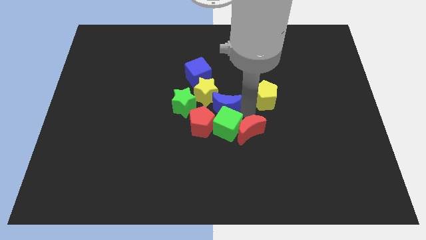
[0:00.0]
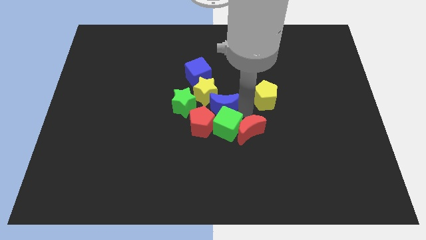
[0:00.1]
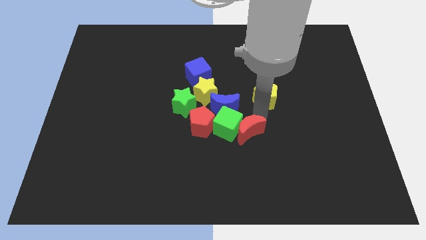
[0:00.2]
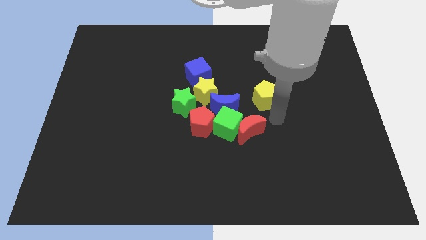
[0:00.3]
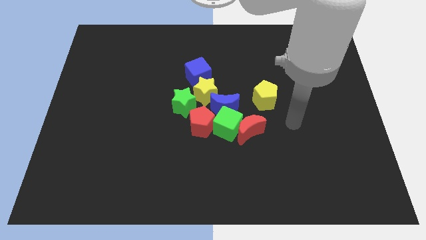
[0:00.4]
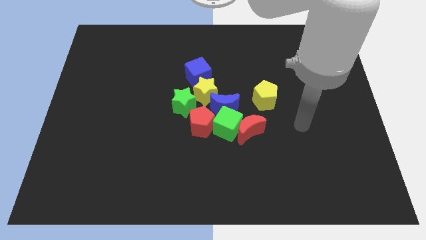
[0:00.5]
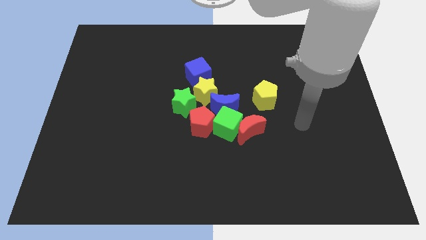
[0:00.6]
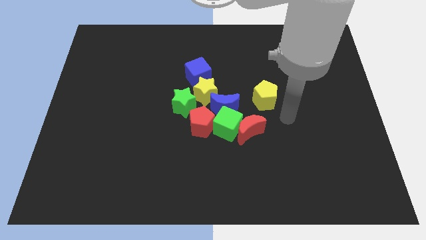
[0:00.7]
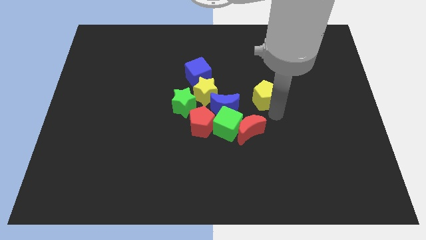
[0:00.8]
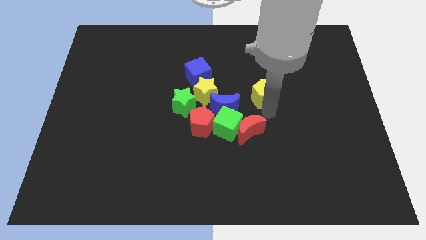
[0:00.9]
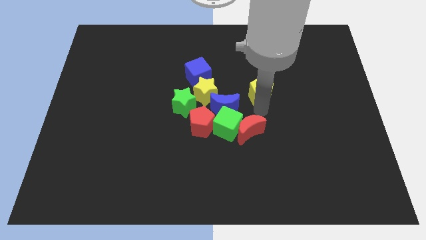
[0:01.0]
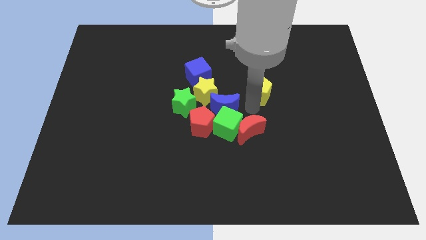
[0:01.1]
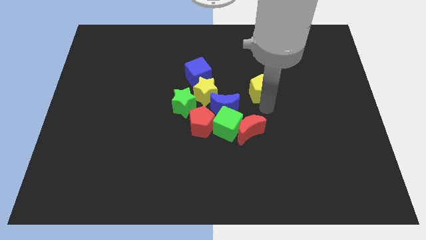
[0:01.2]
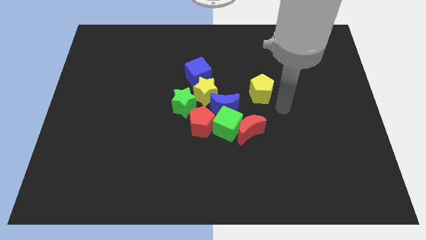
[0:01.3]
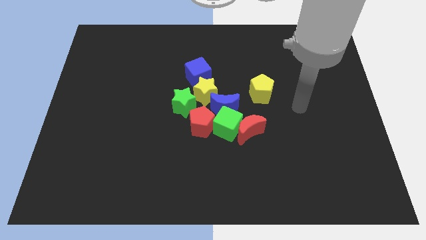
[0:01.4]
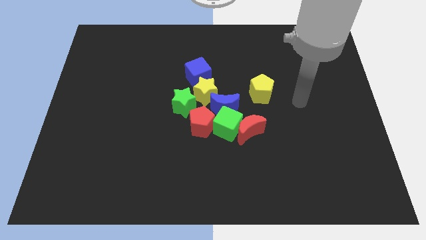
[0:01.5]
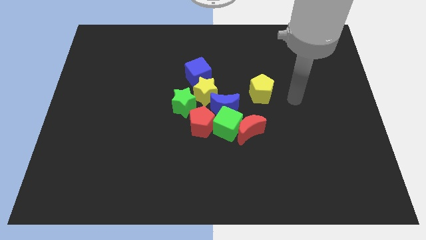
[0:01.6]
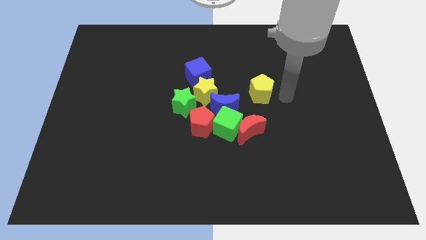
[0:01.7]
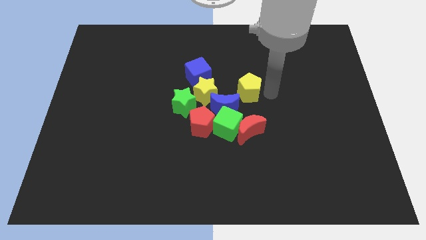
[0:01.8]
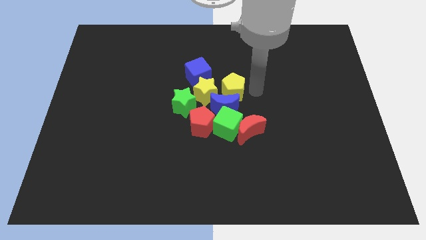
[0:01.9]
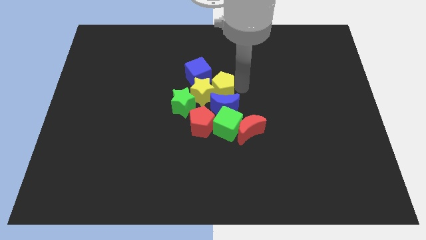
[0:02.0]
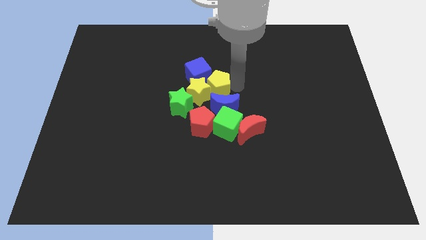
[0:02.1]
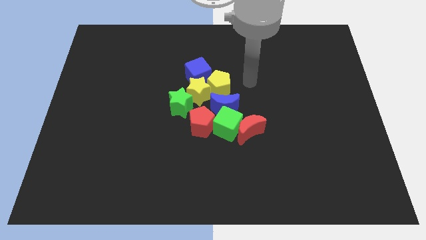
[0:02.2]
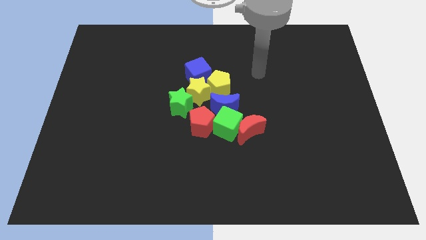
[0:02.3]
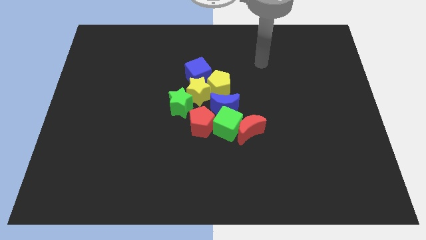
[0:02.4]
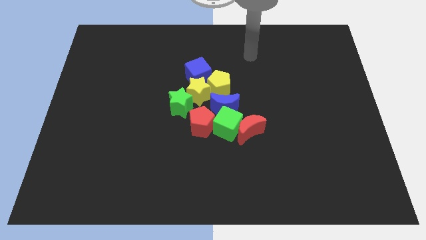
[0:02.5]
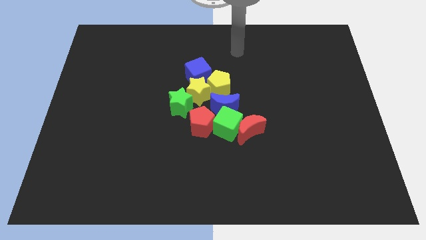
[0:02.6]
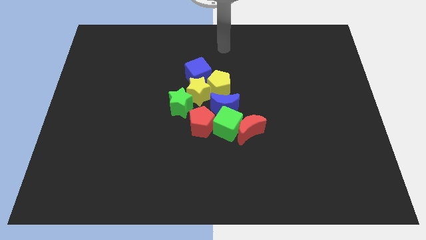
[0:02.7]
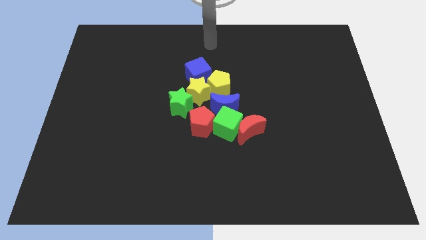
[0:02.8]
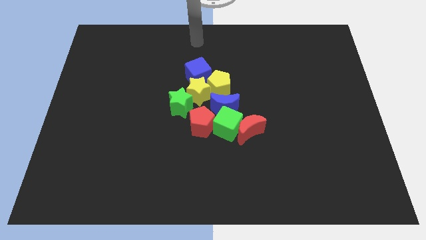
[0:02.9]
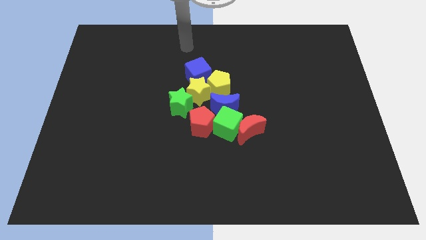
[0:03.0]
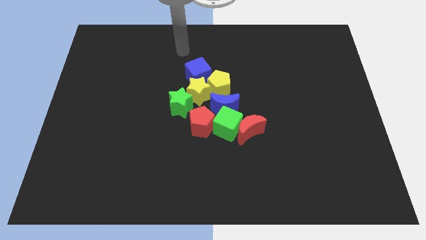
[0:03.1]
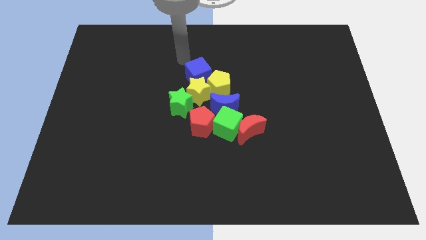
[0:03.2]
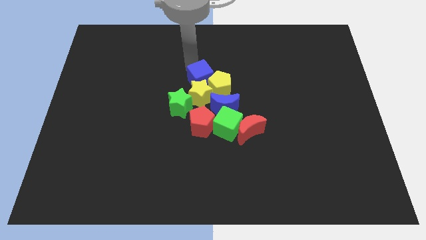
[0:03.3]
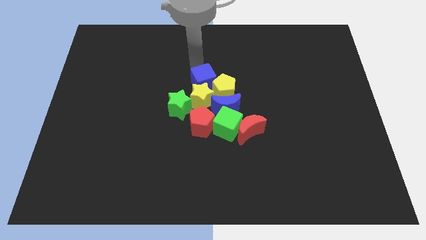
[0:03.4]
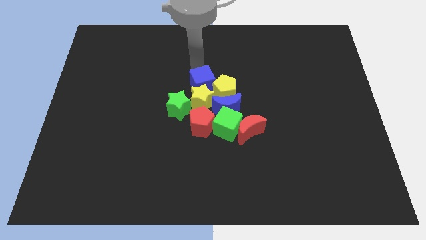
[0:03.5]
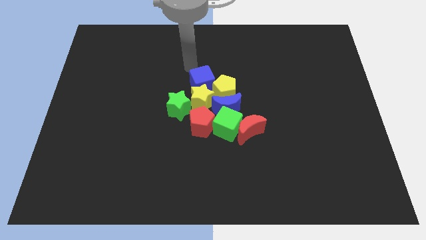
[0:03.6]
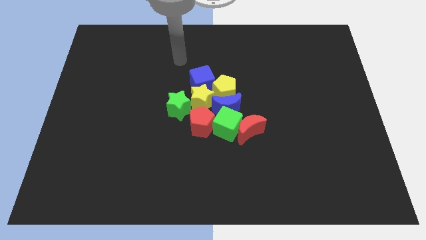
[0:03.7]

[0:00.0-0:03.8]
move the yellow pentagon to the group of blocks

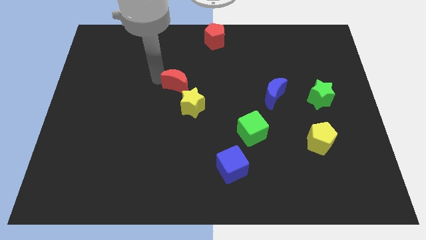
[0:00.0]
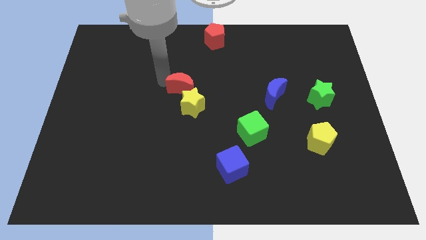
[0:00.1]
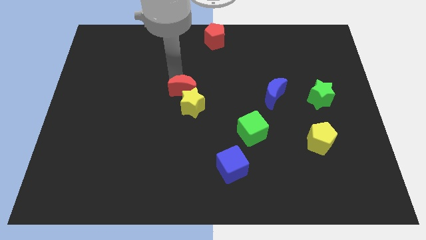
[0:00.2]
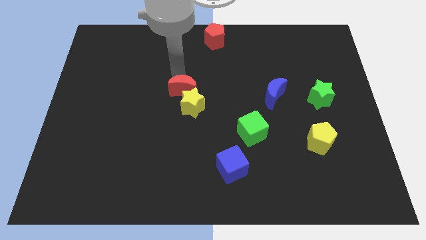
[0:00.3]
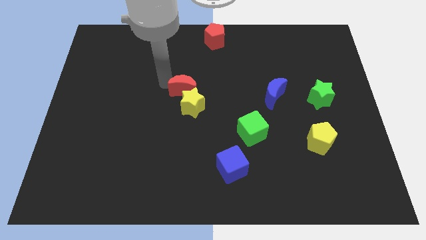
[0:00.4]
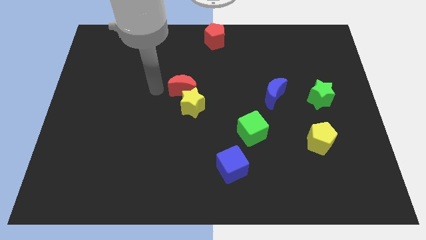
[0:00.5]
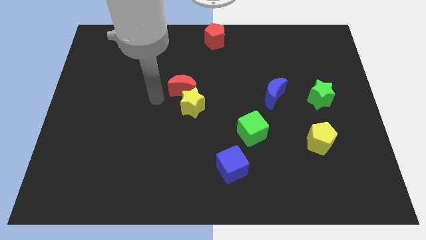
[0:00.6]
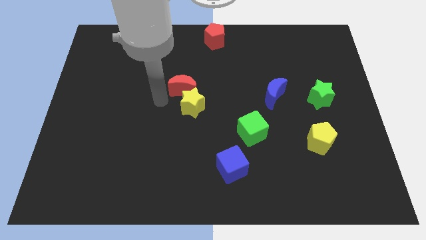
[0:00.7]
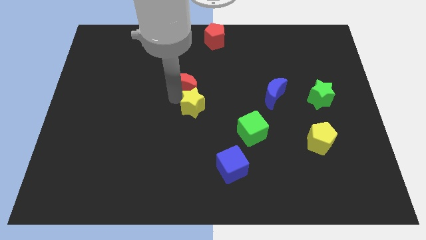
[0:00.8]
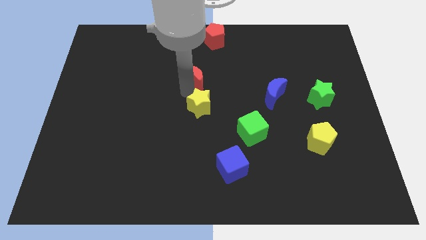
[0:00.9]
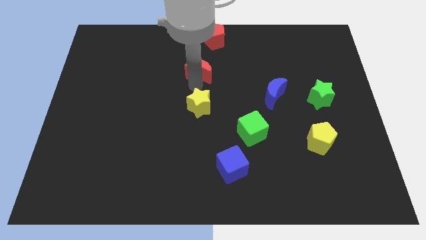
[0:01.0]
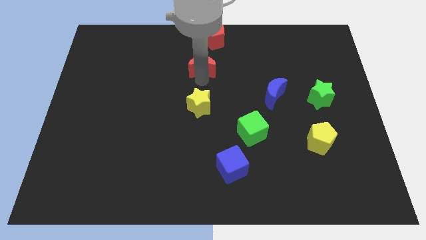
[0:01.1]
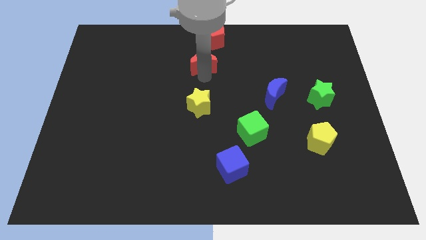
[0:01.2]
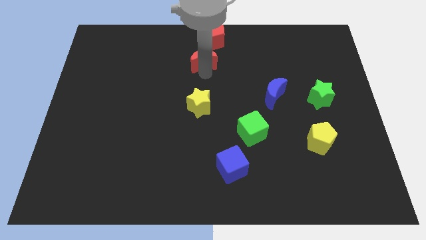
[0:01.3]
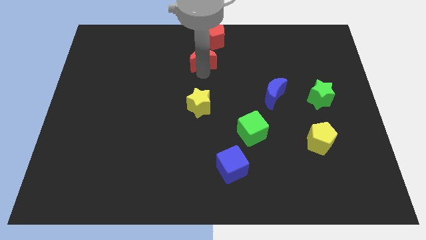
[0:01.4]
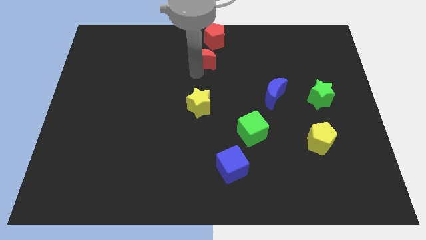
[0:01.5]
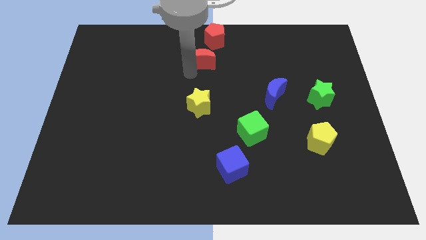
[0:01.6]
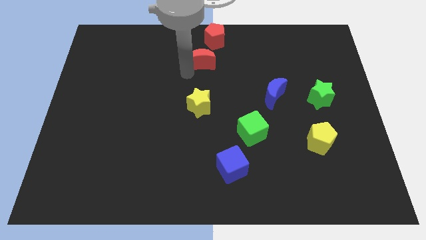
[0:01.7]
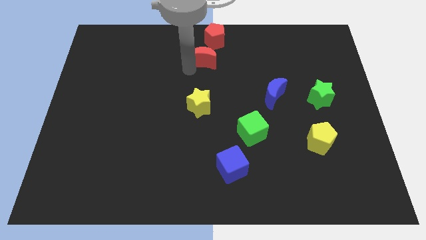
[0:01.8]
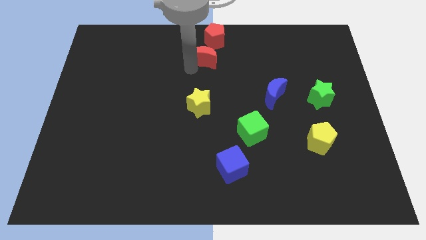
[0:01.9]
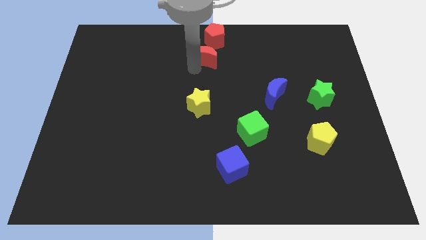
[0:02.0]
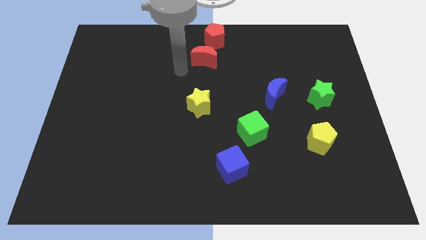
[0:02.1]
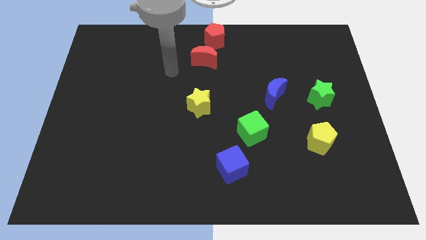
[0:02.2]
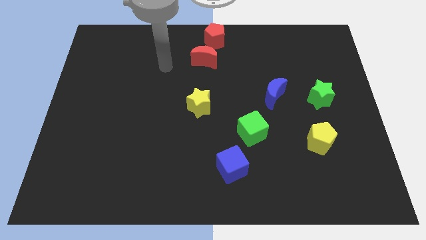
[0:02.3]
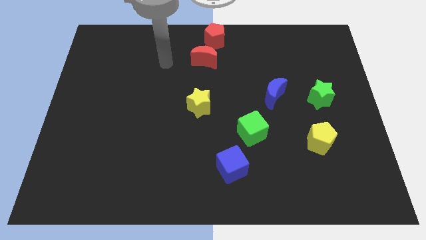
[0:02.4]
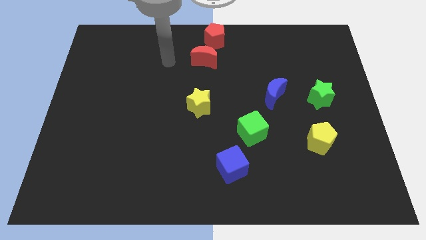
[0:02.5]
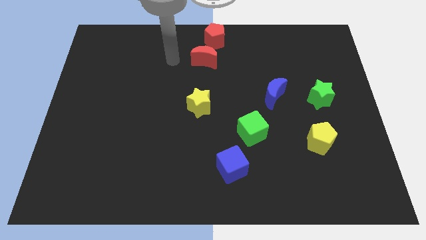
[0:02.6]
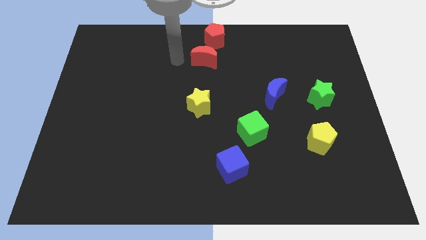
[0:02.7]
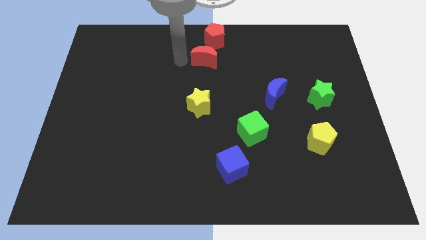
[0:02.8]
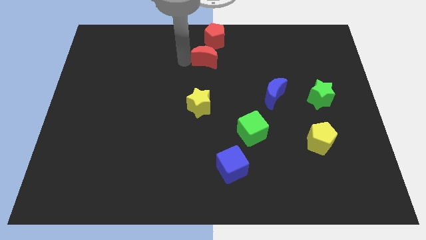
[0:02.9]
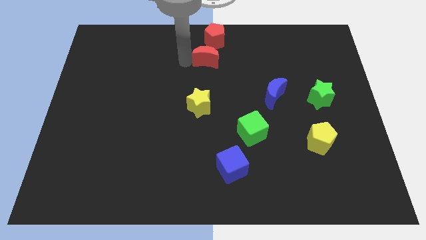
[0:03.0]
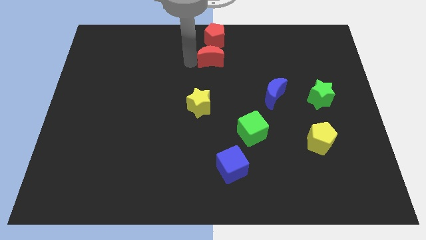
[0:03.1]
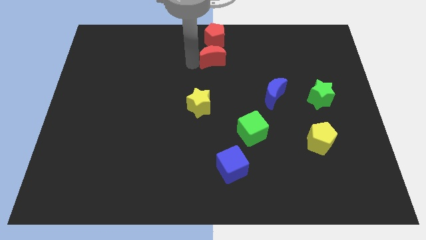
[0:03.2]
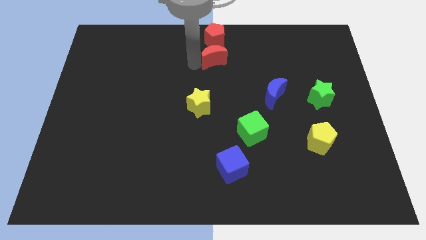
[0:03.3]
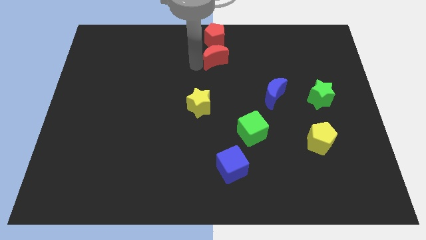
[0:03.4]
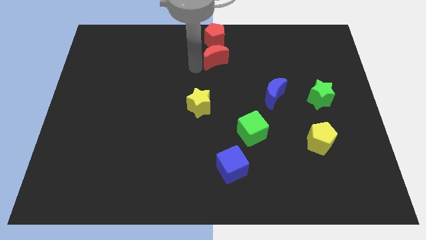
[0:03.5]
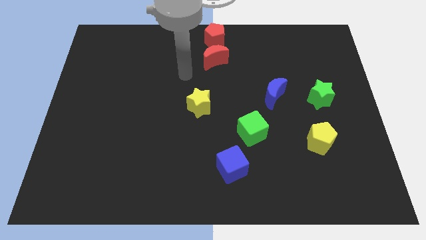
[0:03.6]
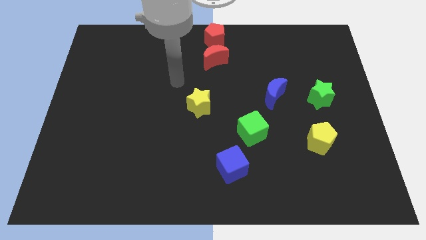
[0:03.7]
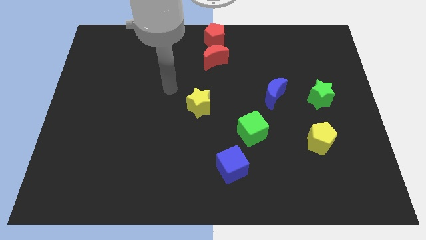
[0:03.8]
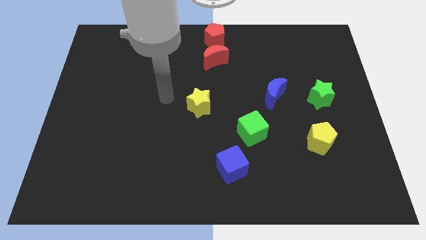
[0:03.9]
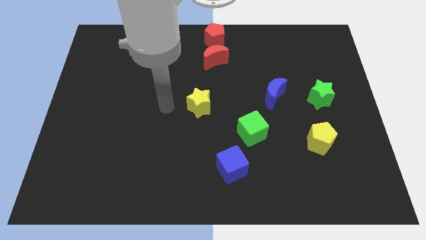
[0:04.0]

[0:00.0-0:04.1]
place red moon below red pentagon

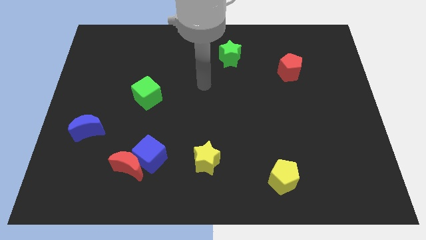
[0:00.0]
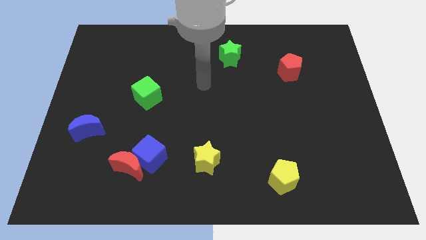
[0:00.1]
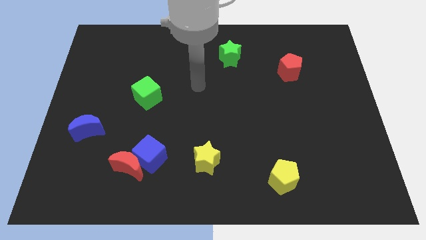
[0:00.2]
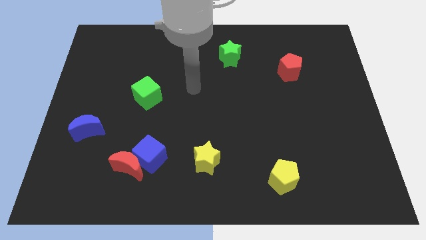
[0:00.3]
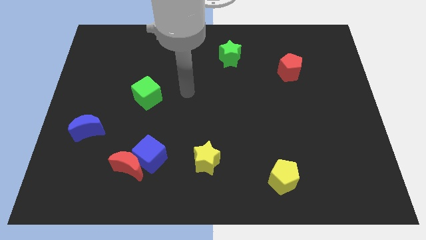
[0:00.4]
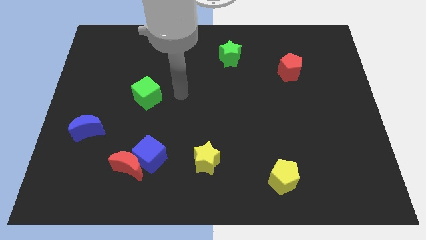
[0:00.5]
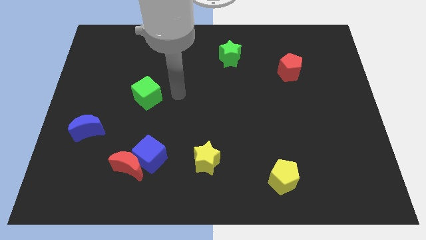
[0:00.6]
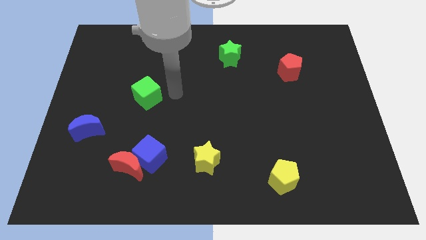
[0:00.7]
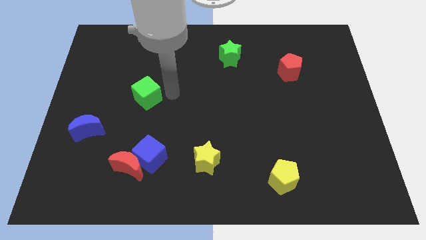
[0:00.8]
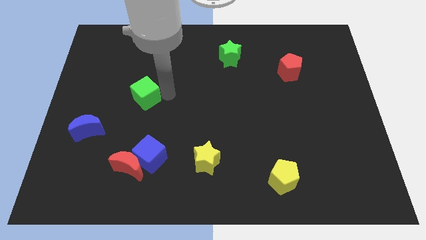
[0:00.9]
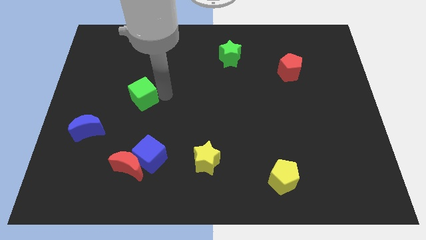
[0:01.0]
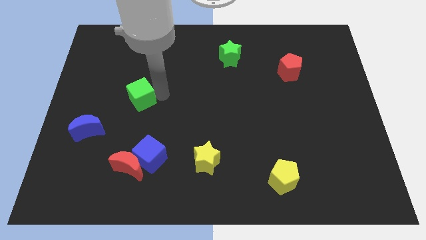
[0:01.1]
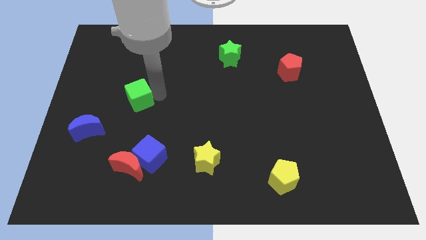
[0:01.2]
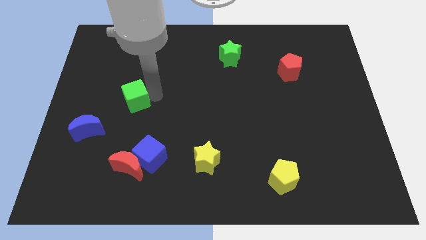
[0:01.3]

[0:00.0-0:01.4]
slightly push the green cube to the left of the board
